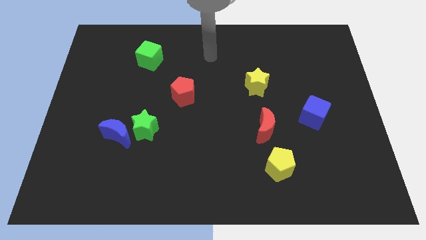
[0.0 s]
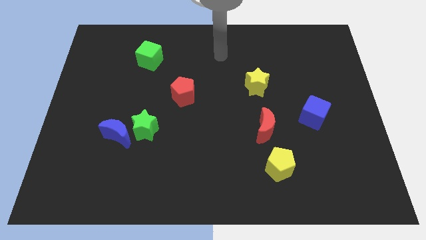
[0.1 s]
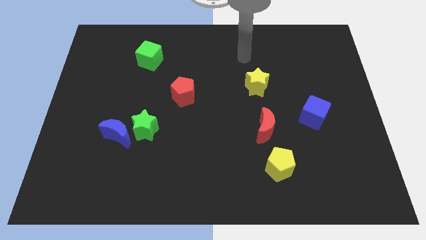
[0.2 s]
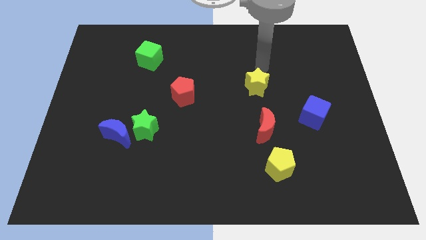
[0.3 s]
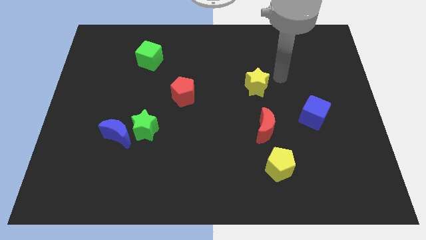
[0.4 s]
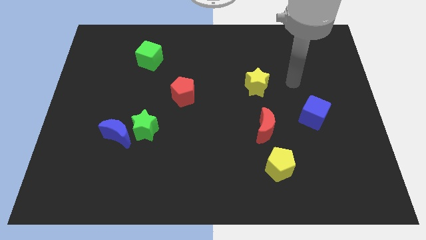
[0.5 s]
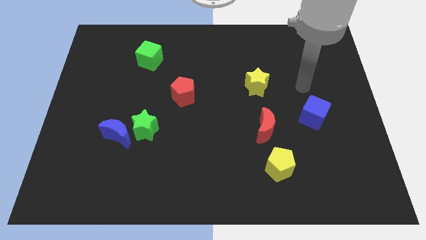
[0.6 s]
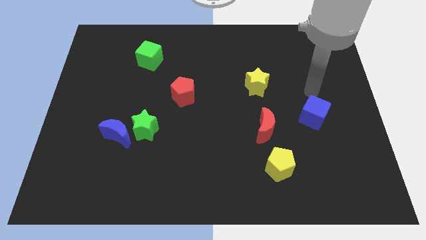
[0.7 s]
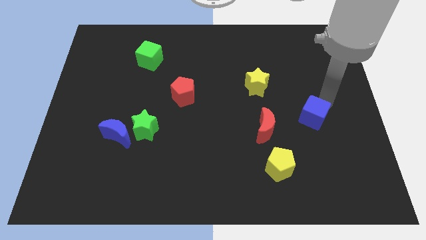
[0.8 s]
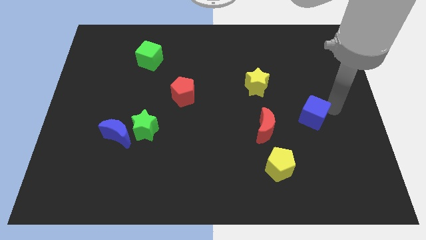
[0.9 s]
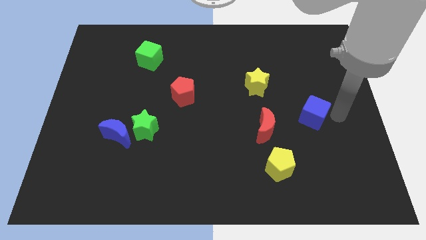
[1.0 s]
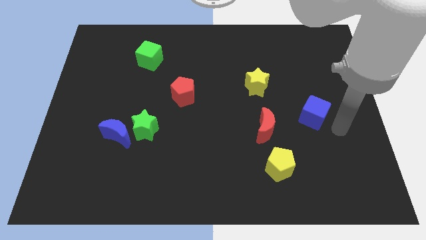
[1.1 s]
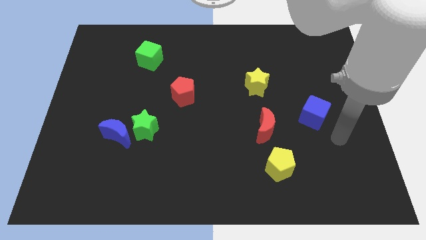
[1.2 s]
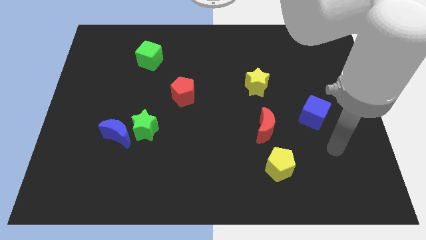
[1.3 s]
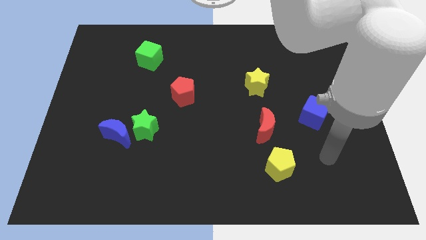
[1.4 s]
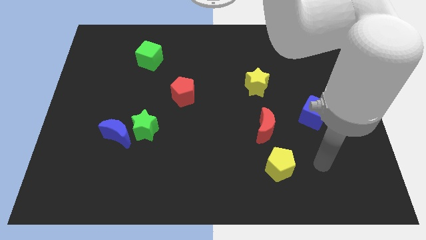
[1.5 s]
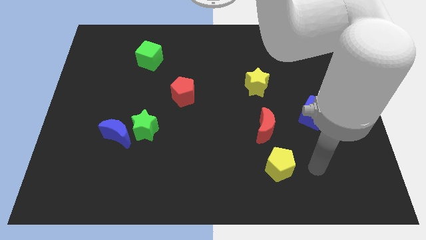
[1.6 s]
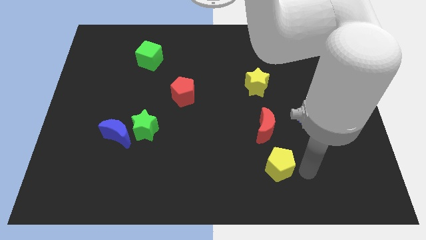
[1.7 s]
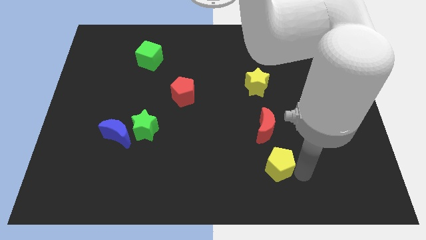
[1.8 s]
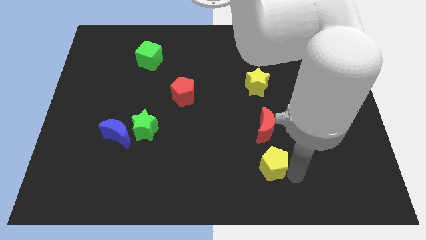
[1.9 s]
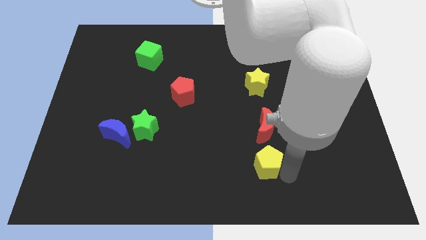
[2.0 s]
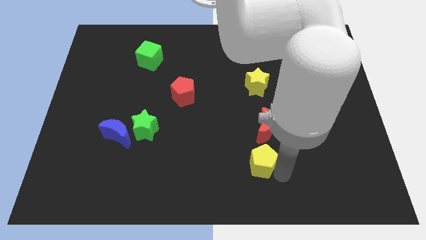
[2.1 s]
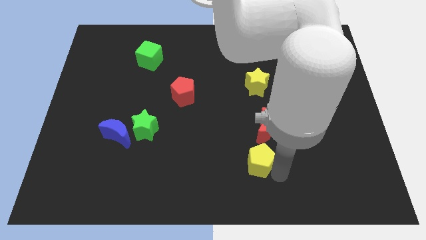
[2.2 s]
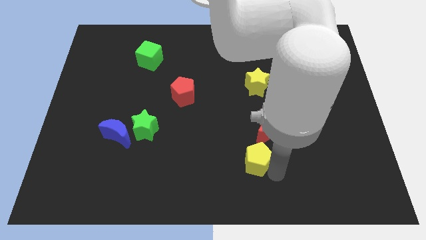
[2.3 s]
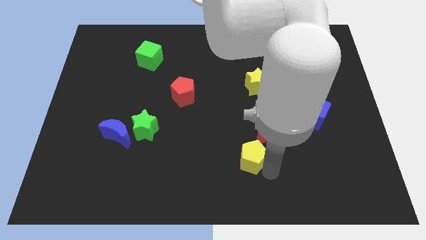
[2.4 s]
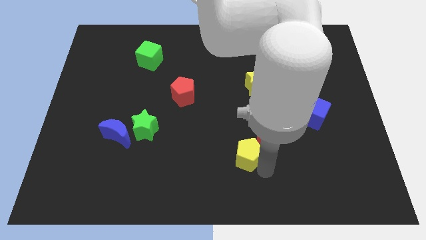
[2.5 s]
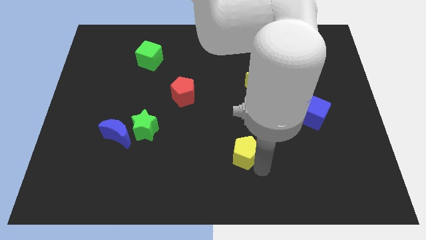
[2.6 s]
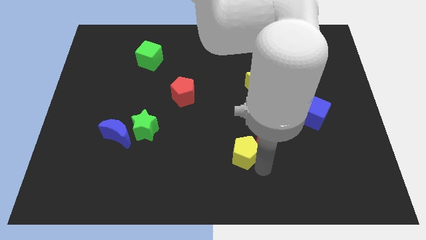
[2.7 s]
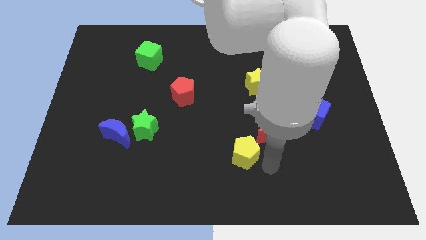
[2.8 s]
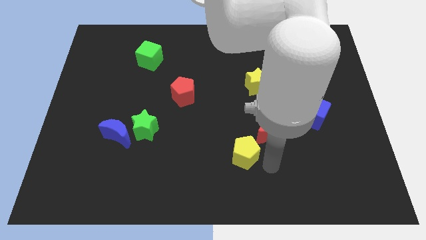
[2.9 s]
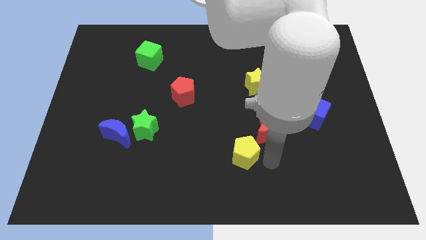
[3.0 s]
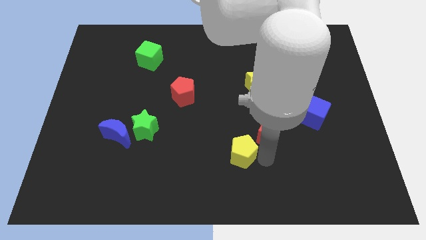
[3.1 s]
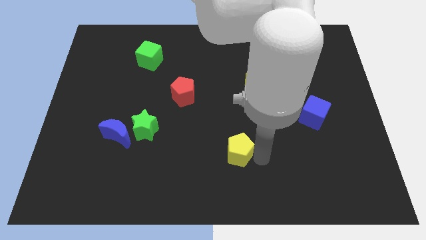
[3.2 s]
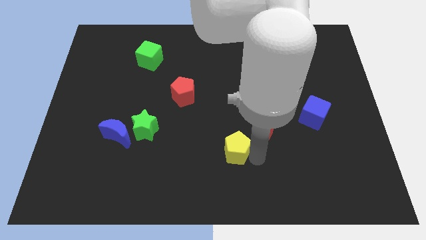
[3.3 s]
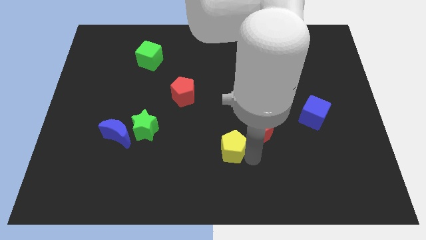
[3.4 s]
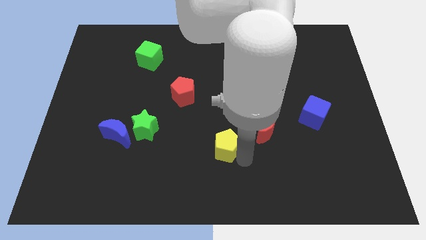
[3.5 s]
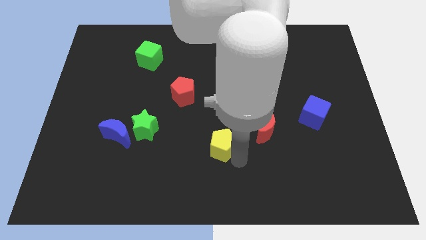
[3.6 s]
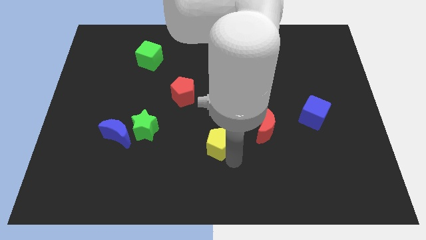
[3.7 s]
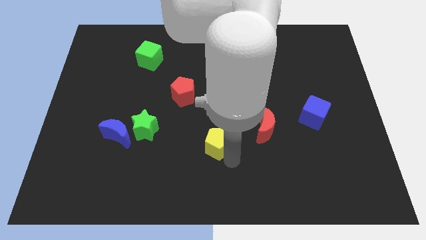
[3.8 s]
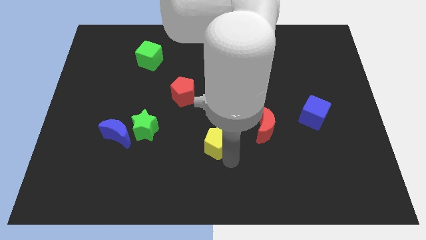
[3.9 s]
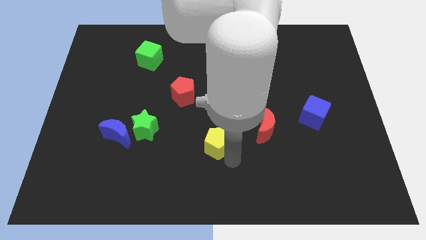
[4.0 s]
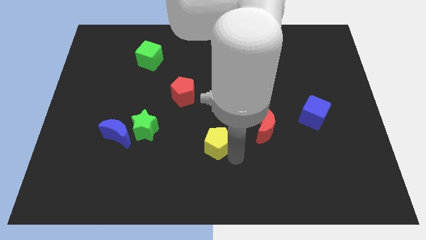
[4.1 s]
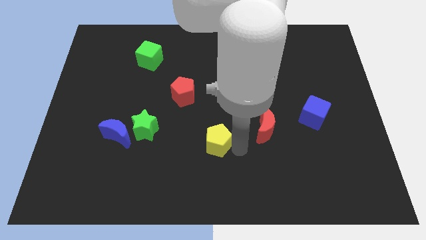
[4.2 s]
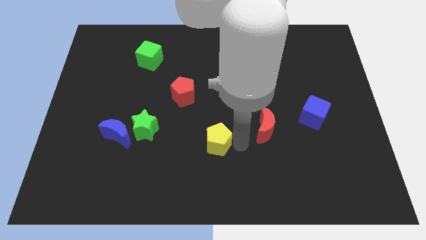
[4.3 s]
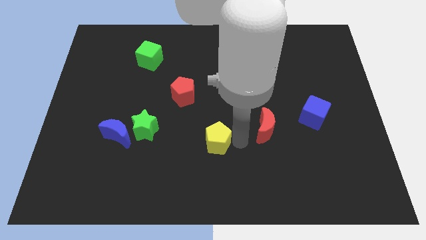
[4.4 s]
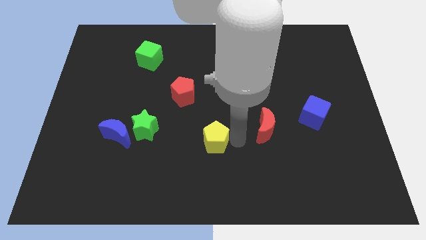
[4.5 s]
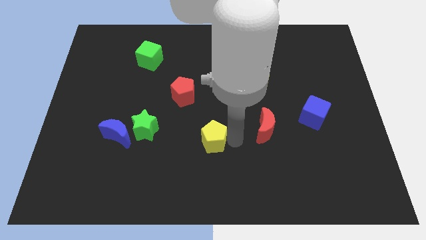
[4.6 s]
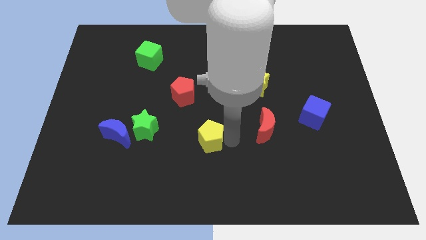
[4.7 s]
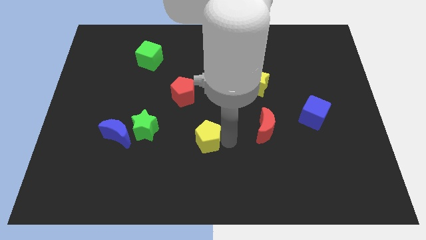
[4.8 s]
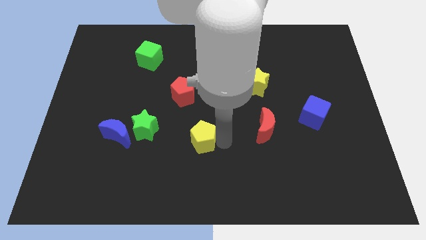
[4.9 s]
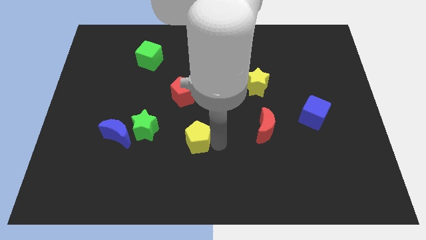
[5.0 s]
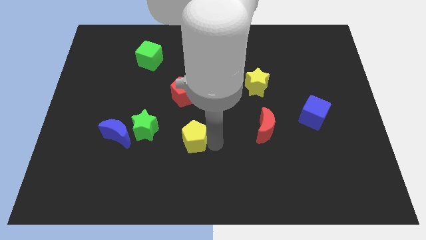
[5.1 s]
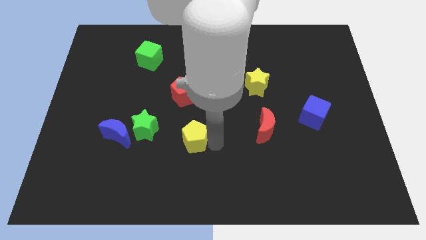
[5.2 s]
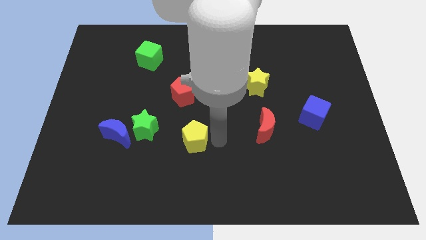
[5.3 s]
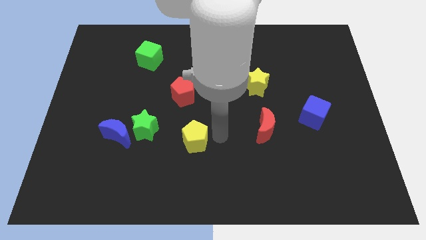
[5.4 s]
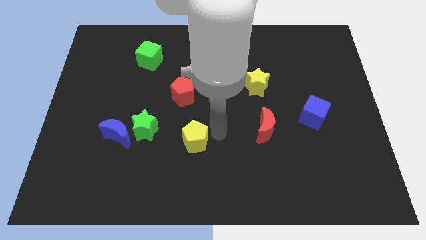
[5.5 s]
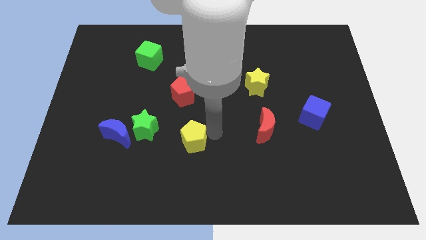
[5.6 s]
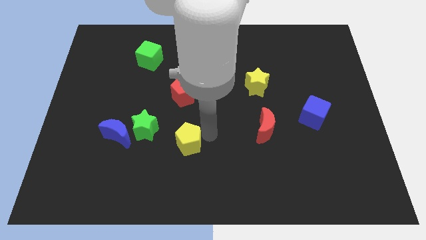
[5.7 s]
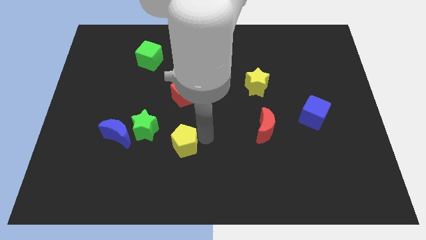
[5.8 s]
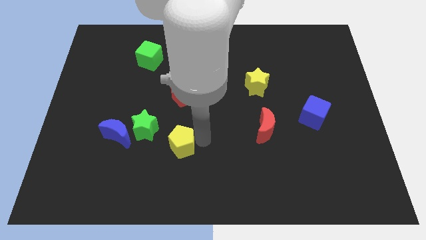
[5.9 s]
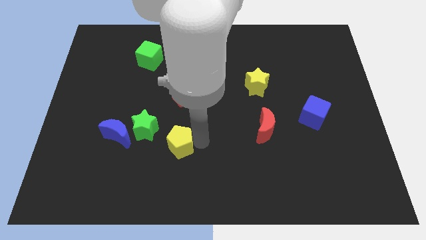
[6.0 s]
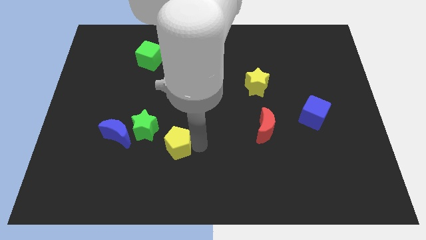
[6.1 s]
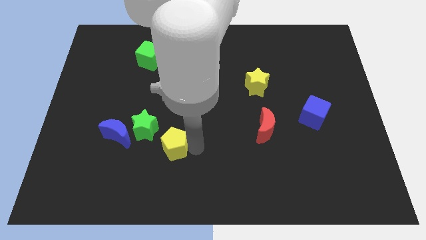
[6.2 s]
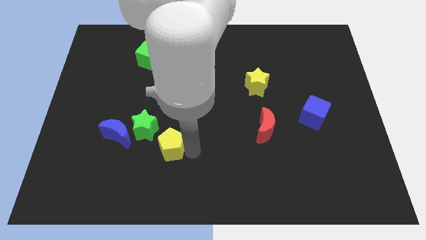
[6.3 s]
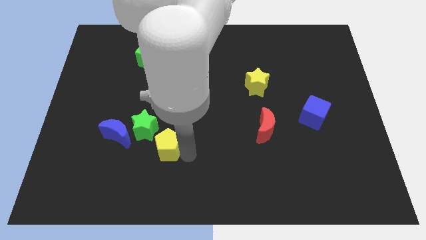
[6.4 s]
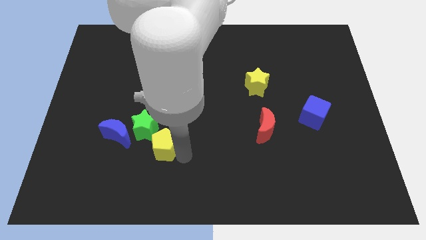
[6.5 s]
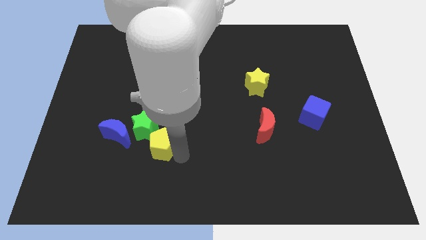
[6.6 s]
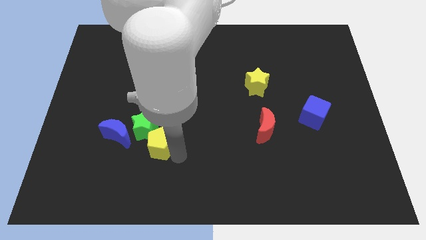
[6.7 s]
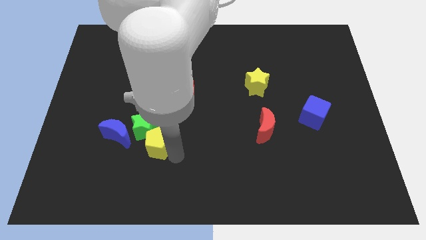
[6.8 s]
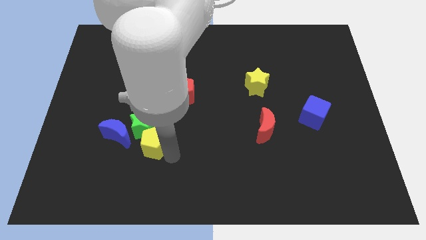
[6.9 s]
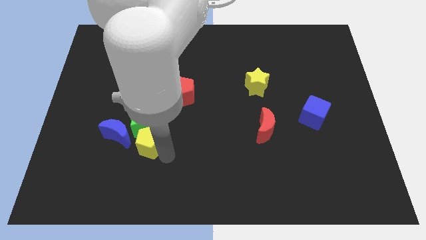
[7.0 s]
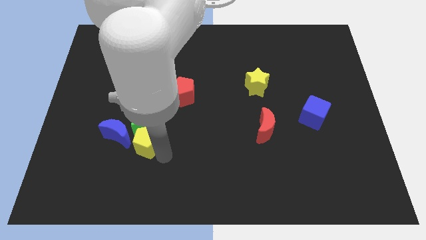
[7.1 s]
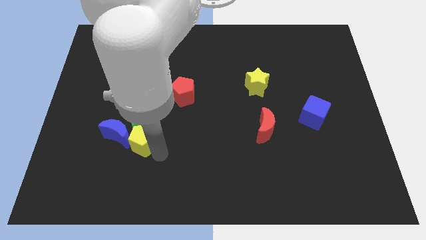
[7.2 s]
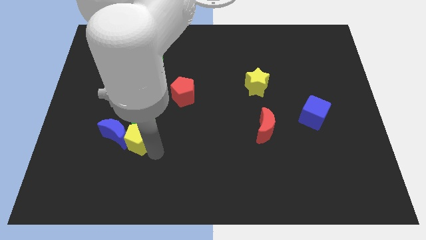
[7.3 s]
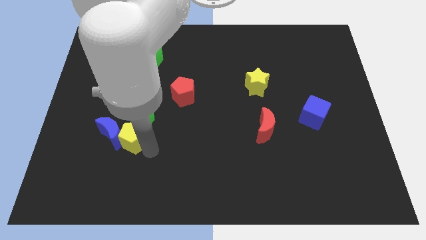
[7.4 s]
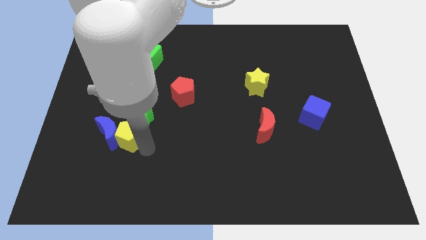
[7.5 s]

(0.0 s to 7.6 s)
move the yellow pentagon close to the blue moon

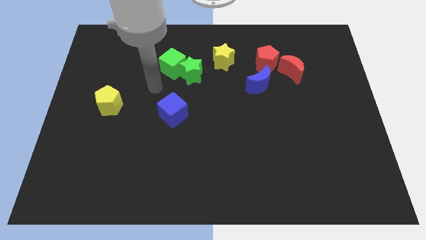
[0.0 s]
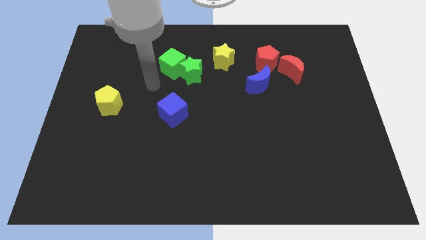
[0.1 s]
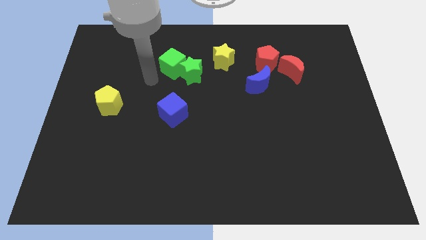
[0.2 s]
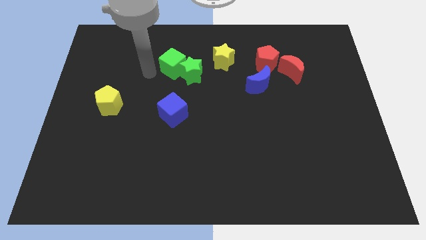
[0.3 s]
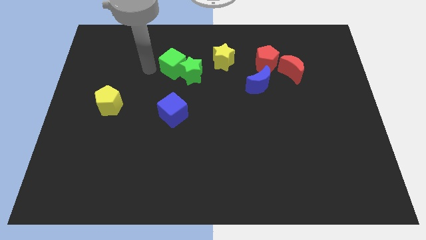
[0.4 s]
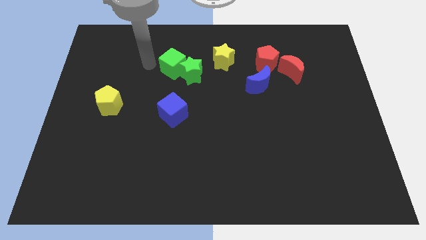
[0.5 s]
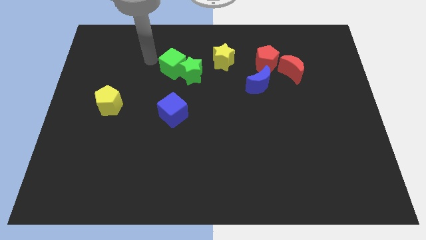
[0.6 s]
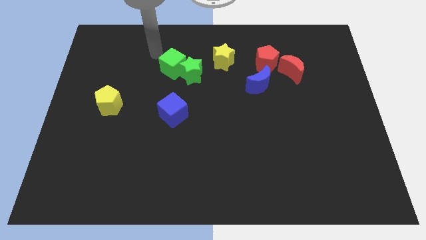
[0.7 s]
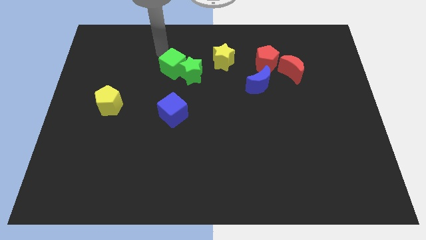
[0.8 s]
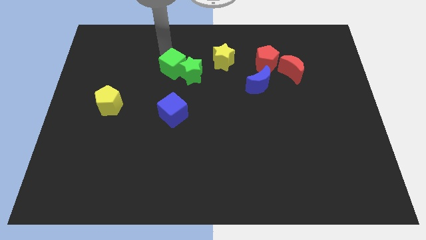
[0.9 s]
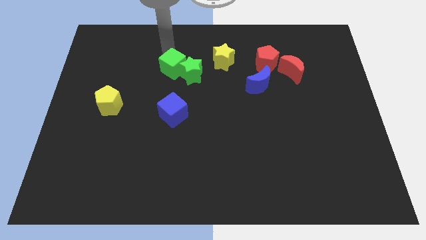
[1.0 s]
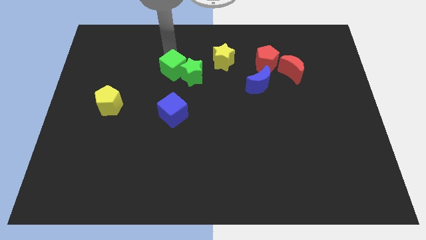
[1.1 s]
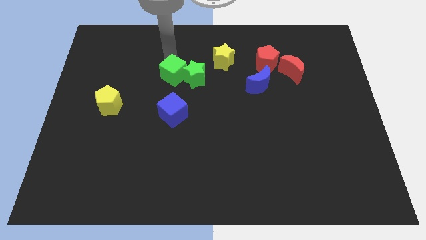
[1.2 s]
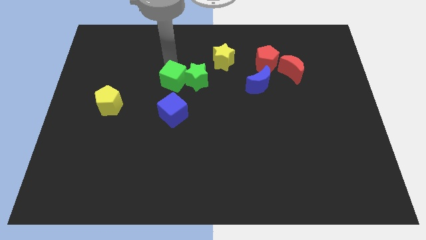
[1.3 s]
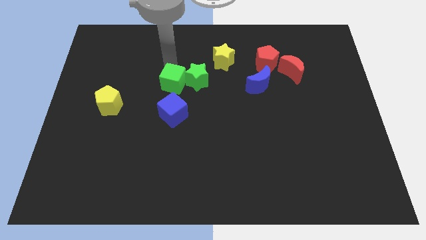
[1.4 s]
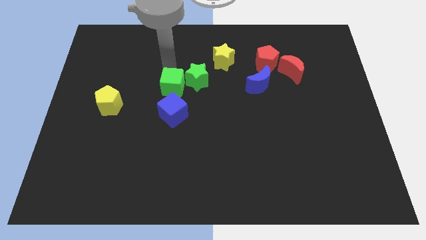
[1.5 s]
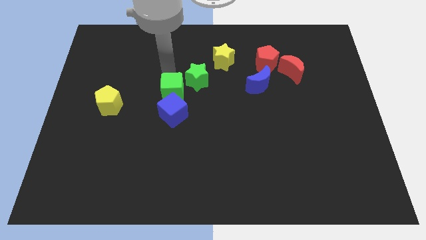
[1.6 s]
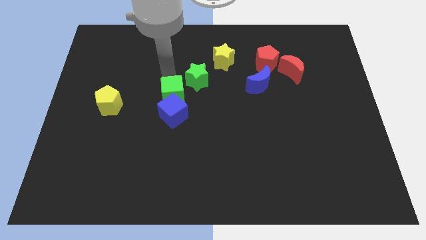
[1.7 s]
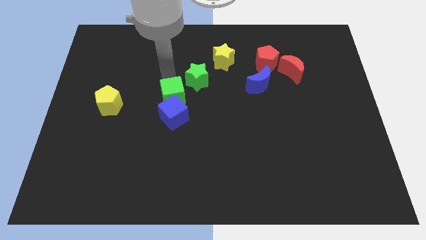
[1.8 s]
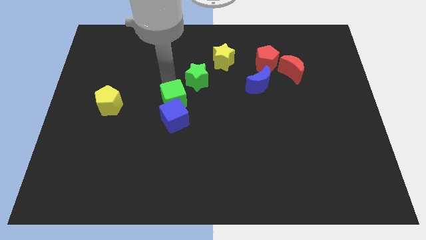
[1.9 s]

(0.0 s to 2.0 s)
slide the green cube next to the blue cube
